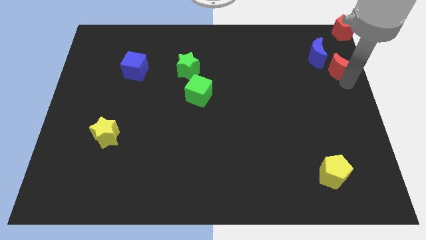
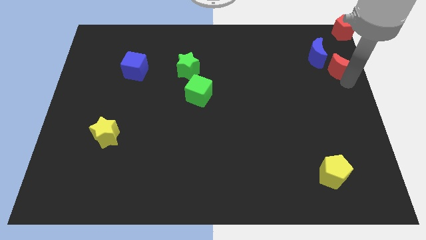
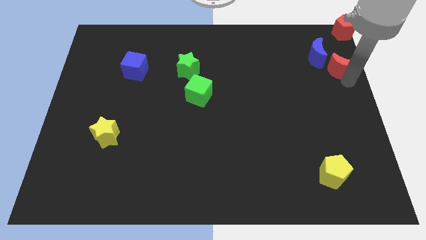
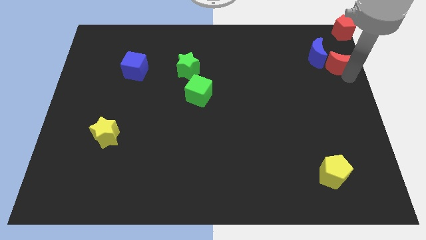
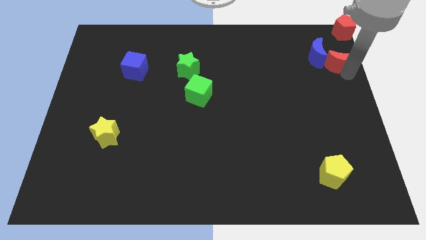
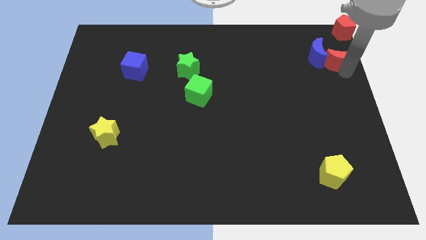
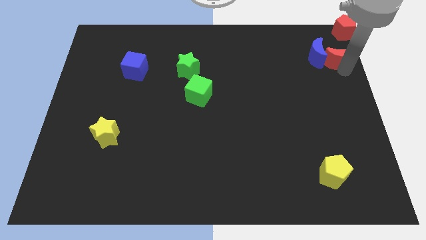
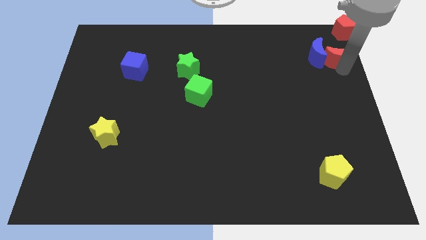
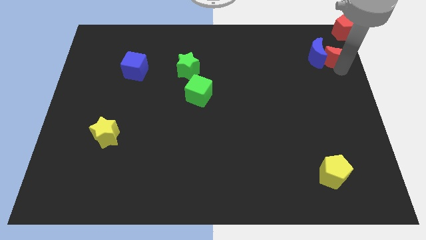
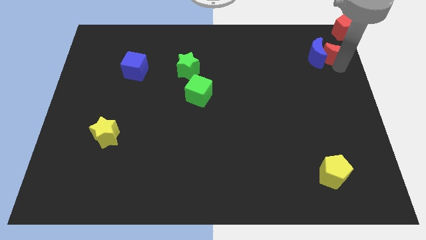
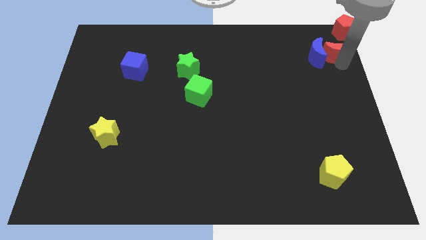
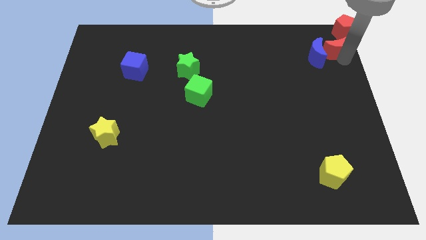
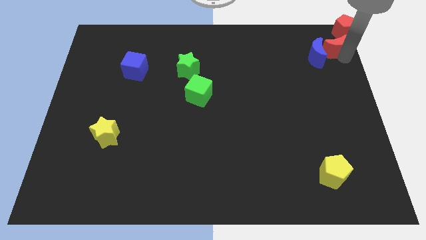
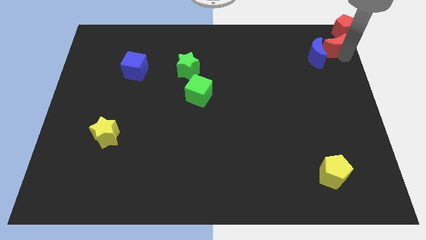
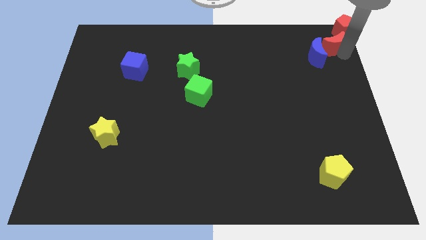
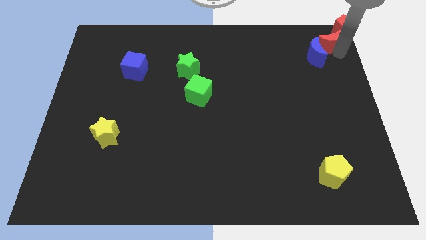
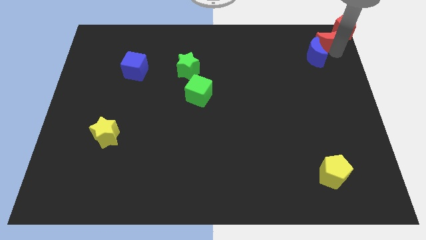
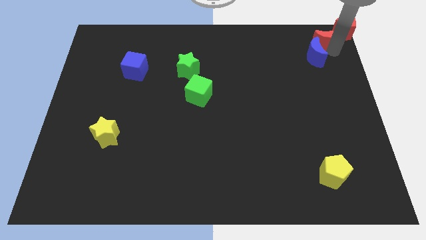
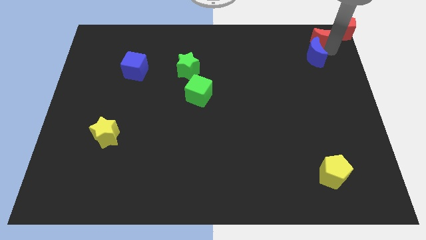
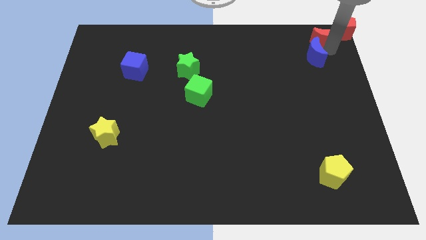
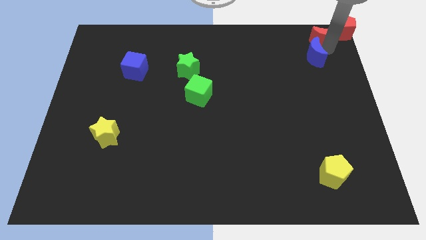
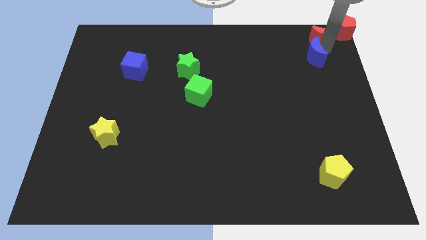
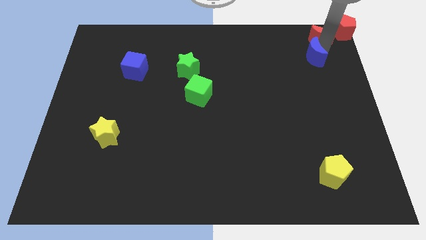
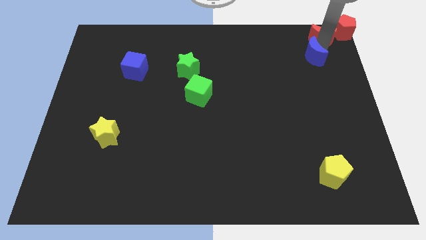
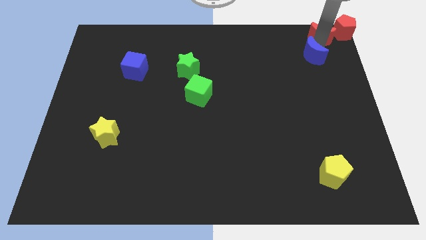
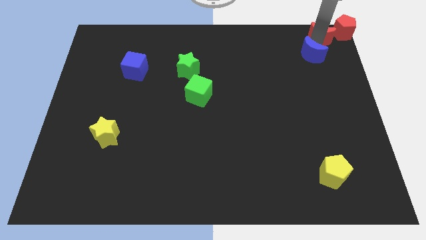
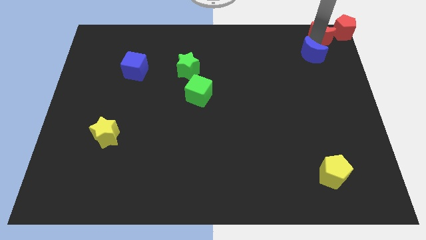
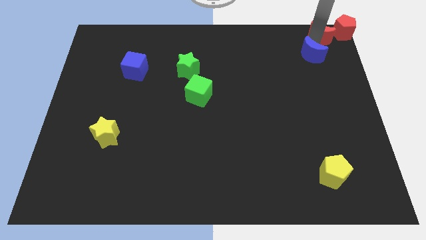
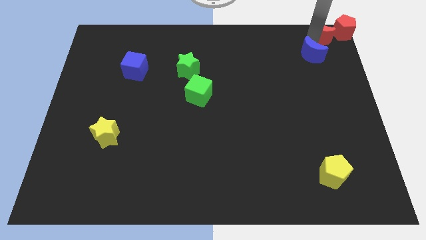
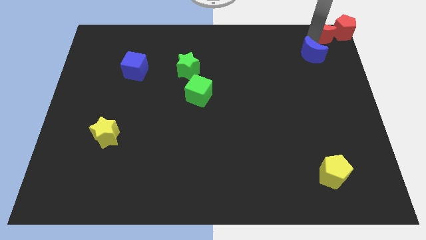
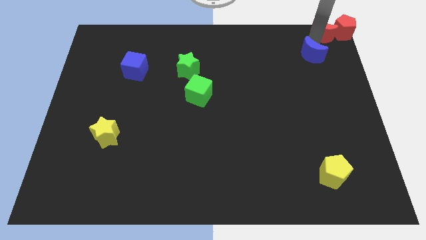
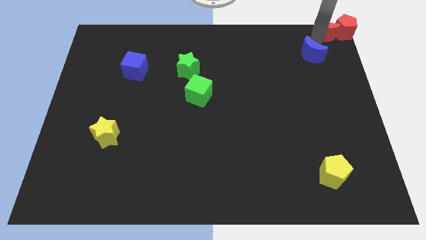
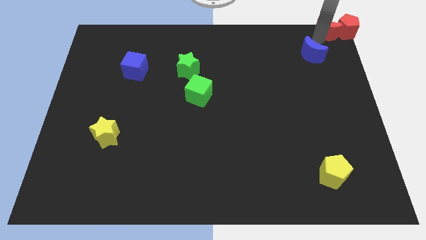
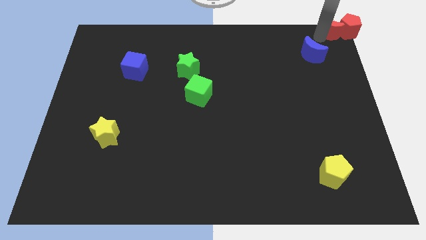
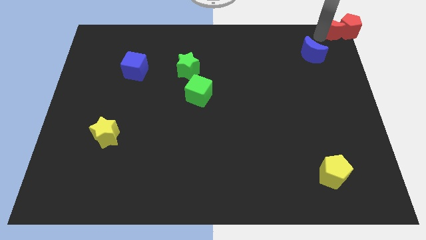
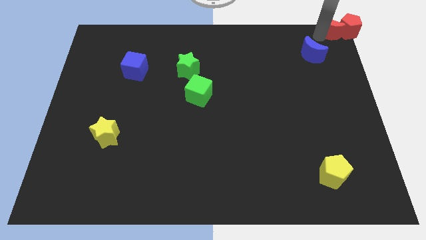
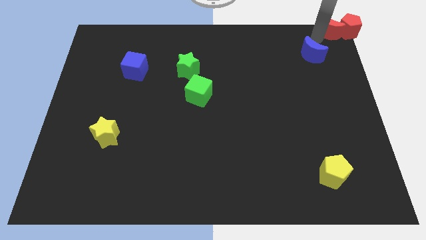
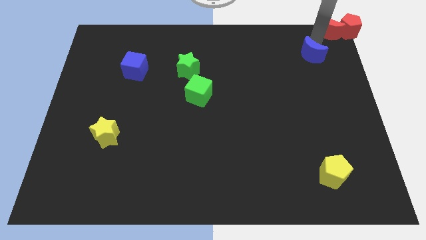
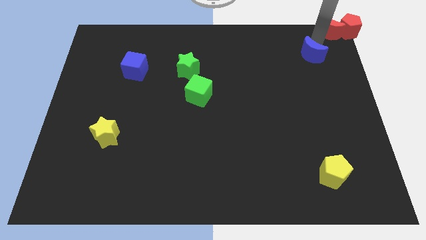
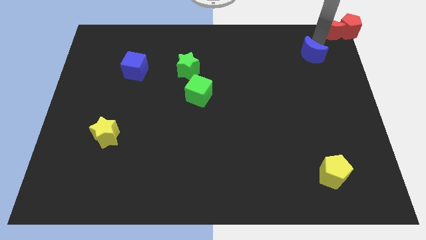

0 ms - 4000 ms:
place the red moon beside red pentagon

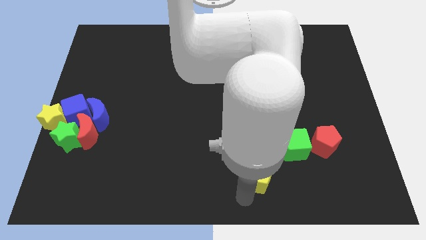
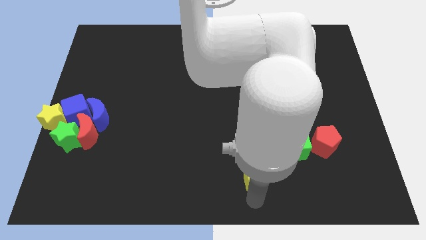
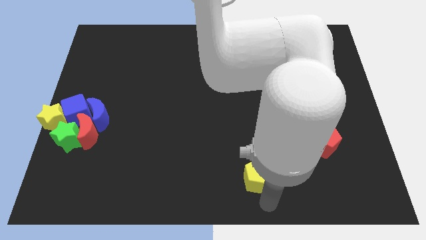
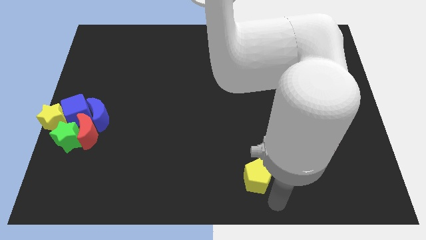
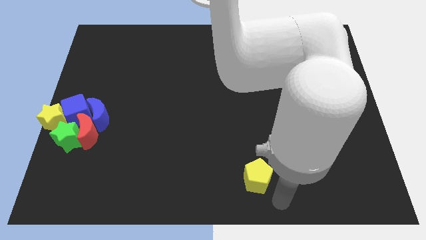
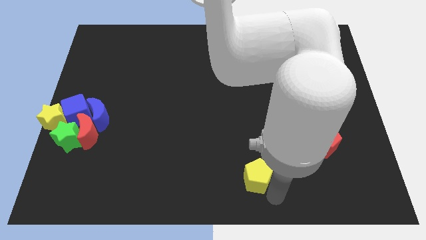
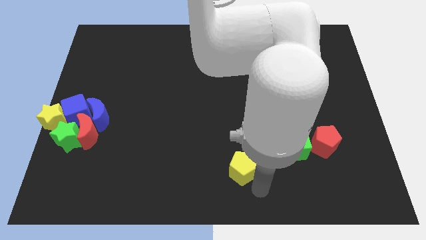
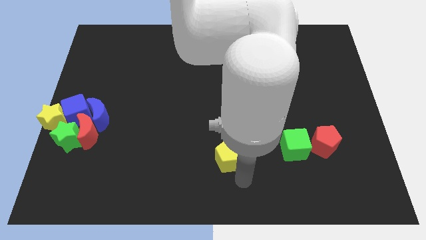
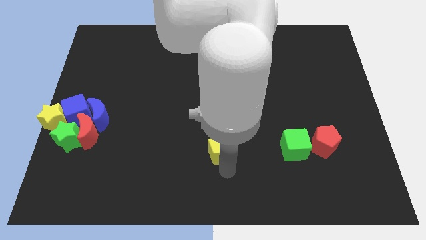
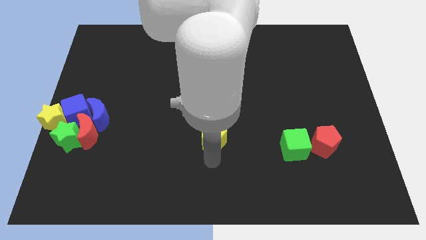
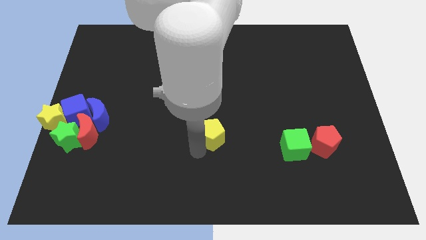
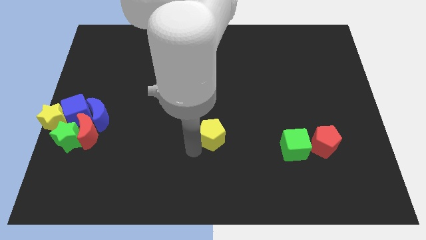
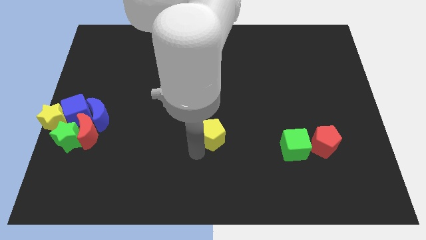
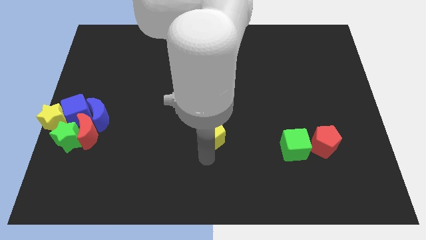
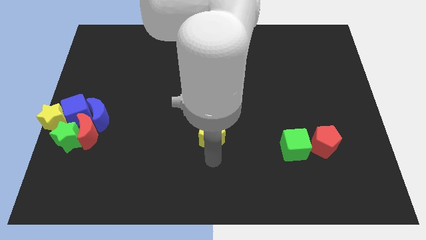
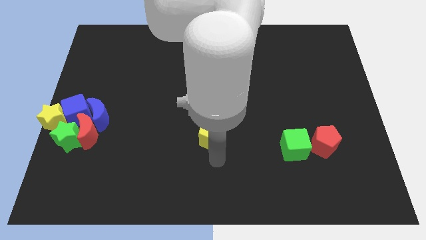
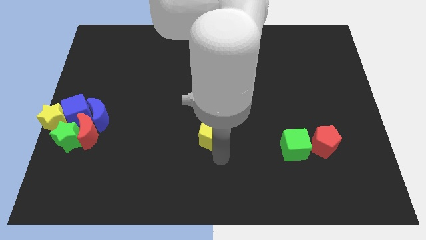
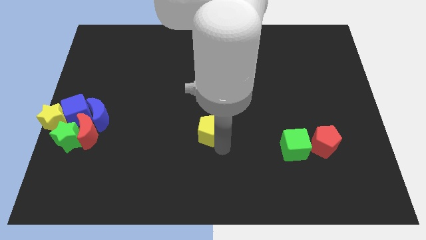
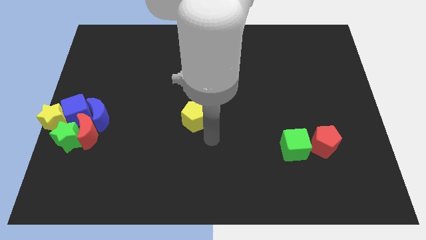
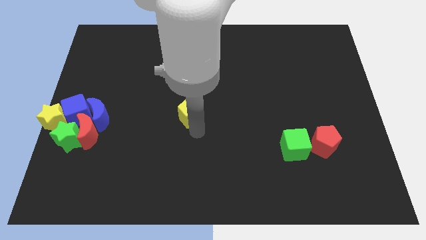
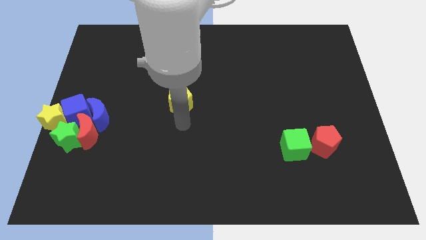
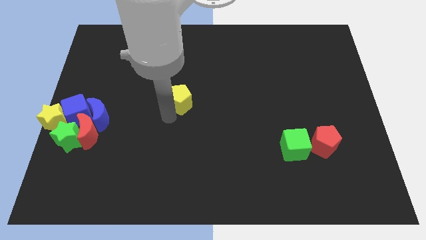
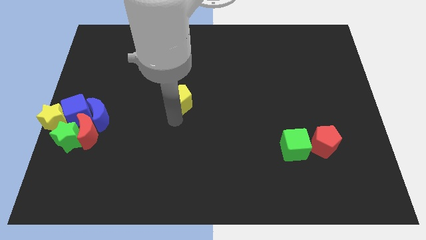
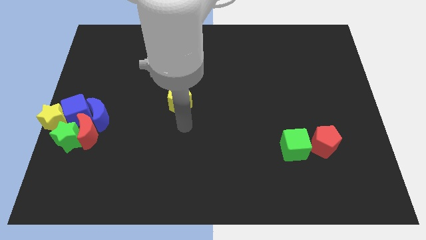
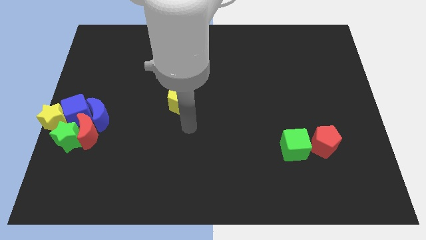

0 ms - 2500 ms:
place the yellow pentagon to the right of the group of blocks

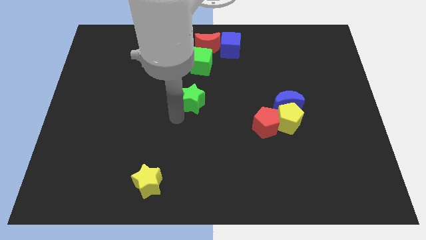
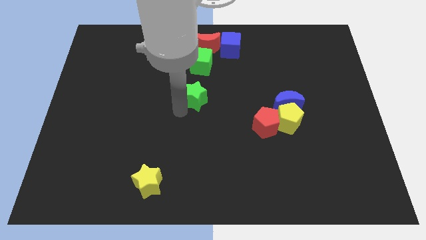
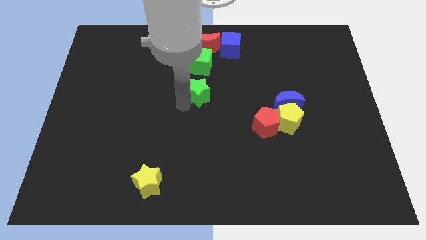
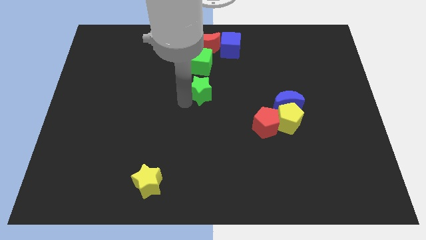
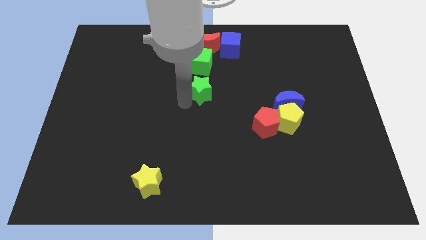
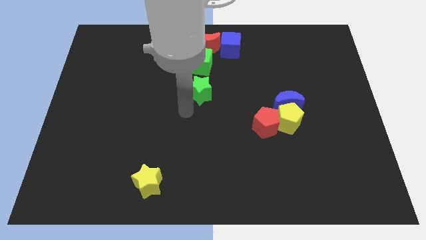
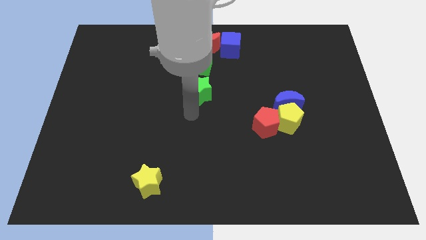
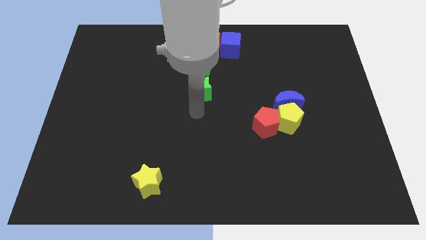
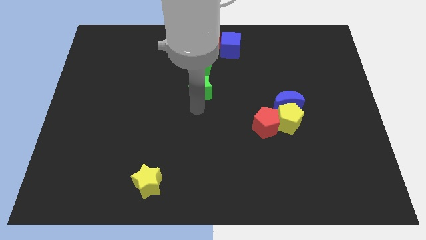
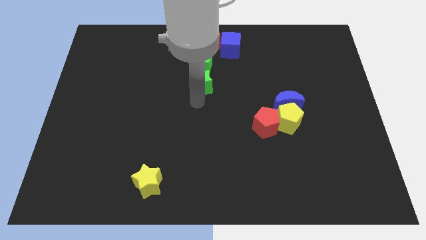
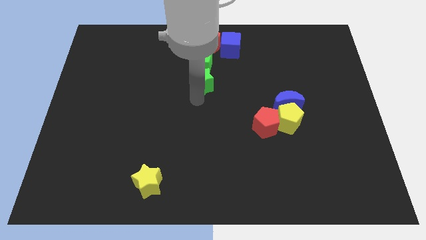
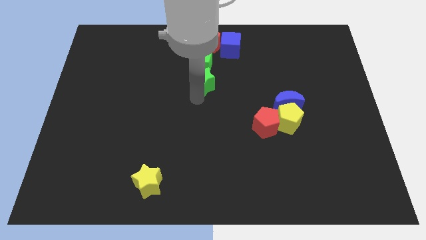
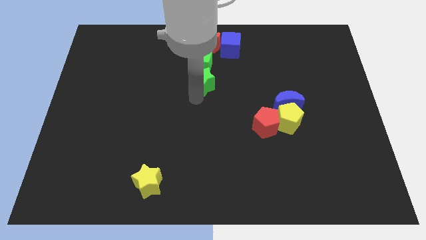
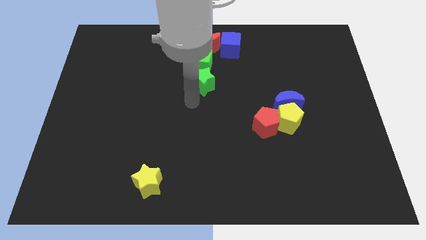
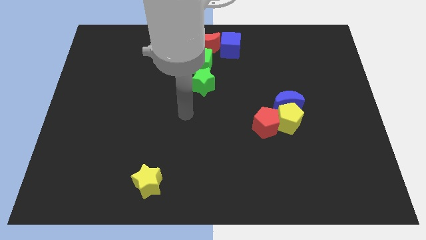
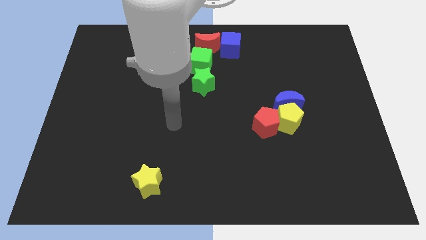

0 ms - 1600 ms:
push the green star close to the bottom of the green cube

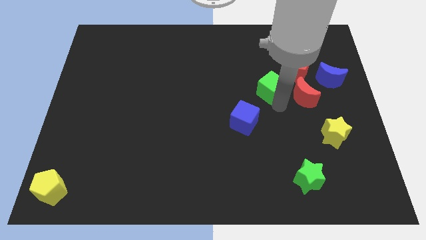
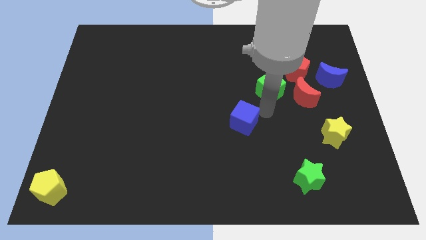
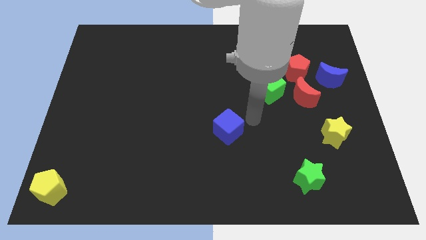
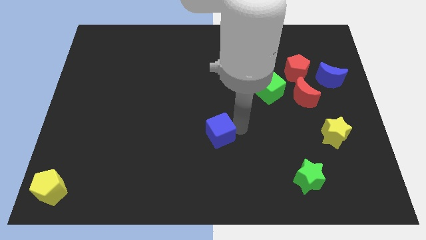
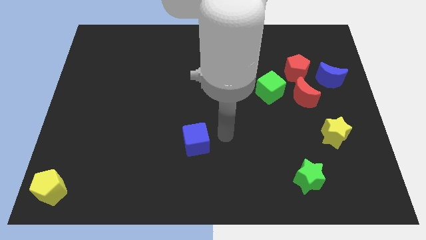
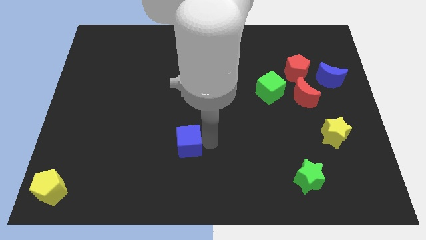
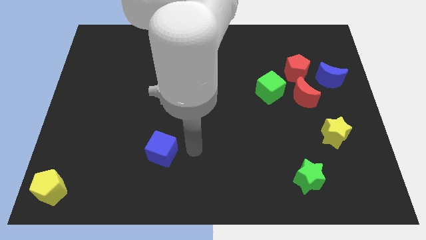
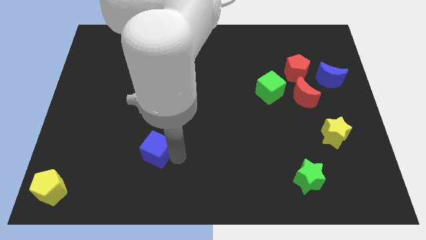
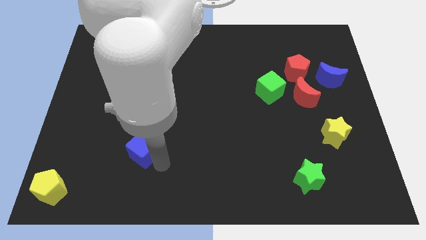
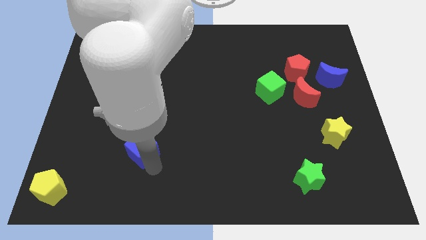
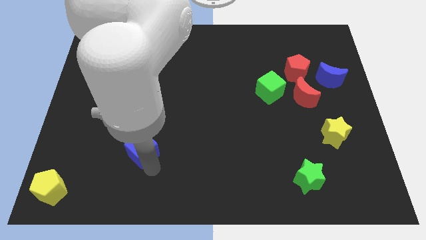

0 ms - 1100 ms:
move blue cube diagonal to yellow pentagon
